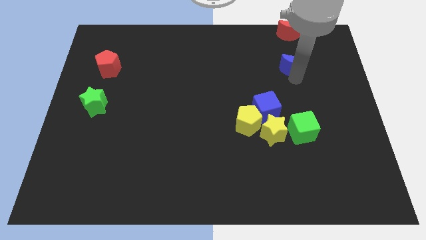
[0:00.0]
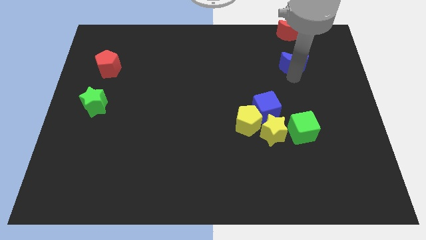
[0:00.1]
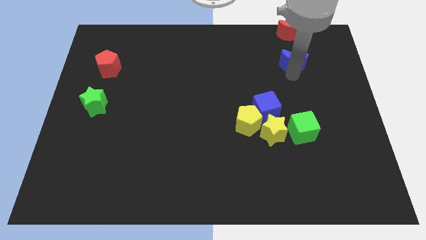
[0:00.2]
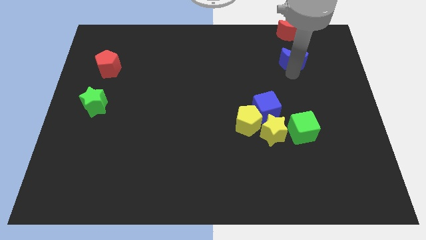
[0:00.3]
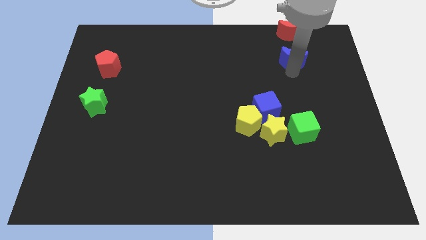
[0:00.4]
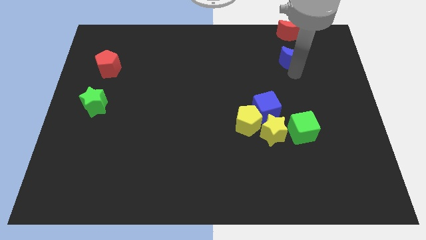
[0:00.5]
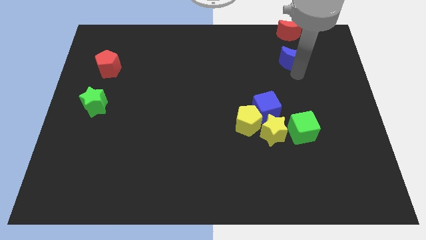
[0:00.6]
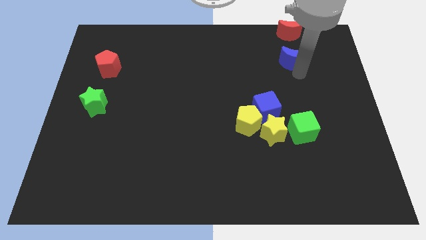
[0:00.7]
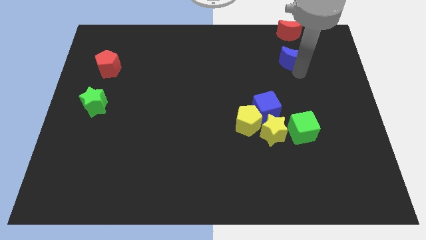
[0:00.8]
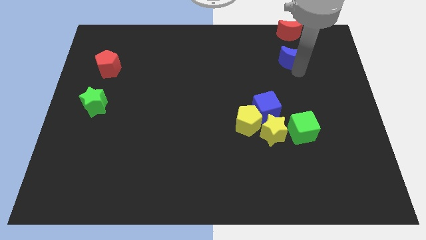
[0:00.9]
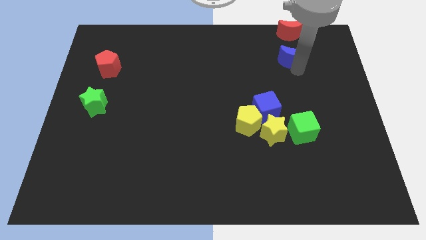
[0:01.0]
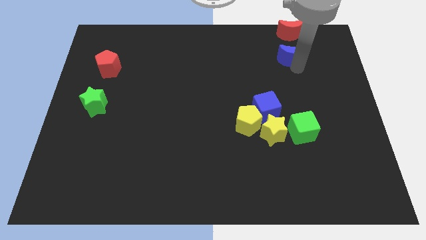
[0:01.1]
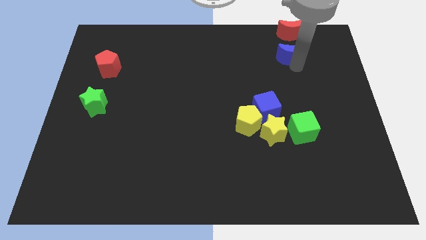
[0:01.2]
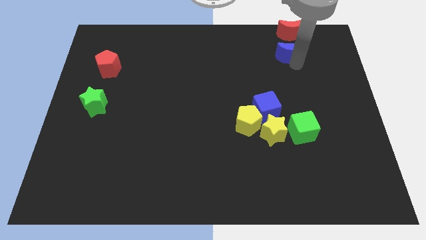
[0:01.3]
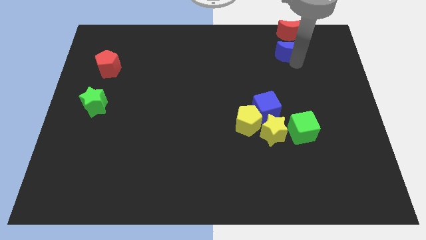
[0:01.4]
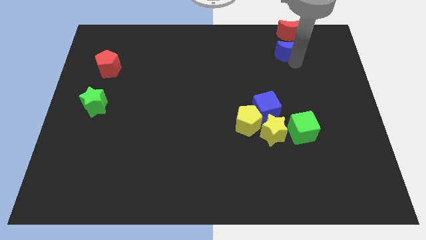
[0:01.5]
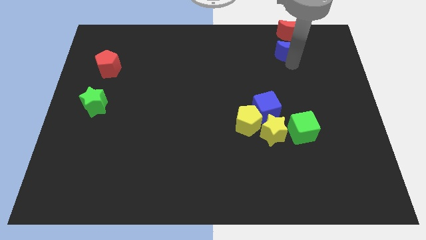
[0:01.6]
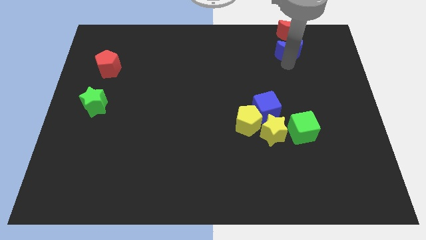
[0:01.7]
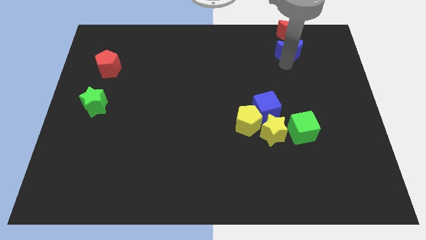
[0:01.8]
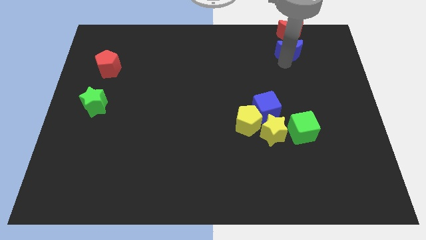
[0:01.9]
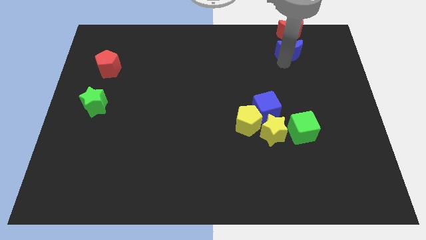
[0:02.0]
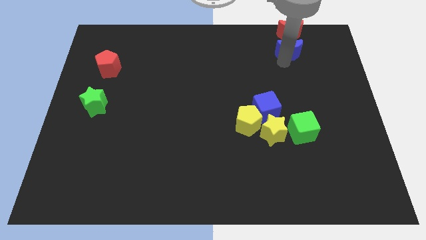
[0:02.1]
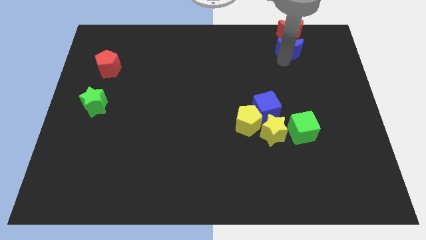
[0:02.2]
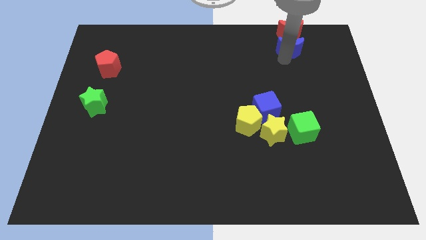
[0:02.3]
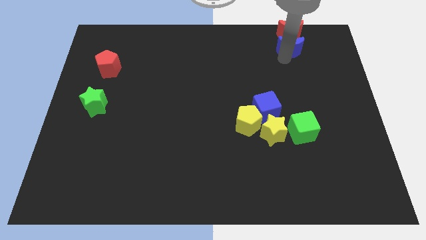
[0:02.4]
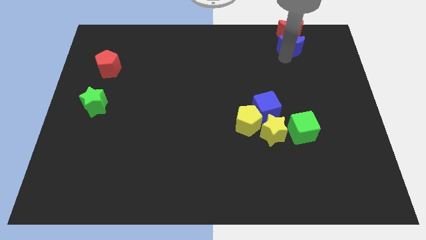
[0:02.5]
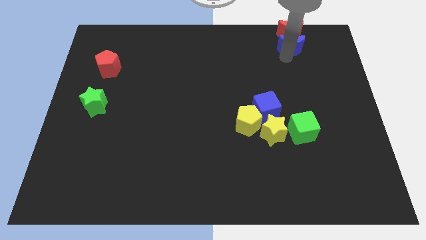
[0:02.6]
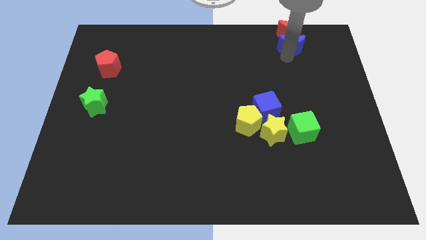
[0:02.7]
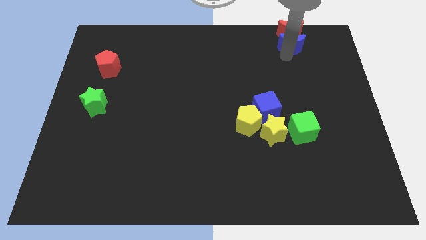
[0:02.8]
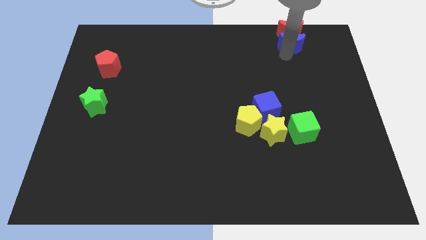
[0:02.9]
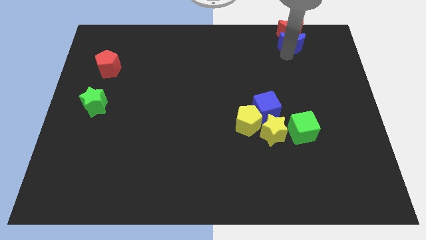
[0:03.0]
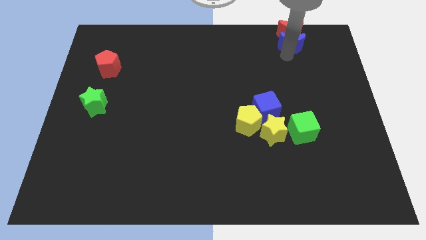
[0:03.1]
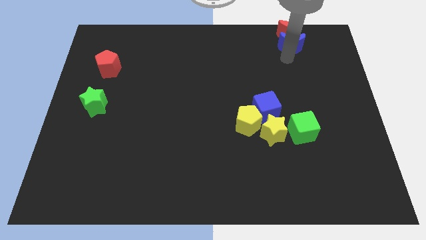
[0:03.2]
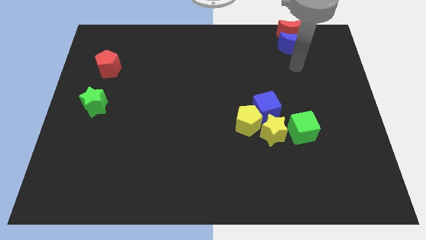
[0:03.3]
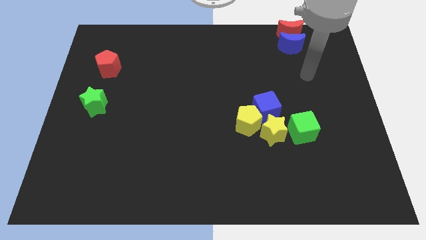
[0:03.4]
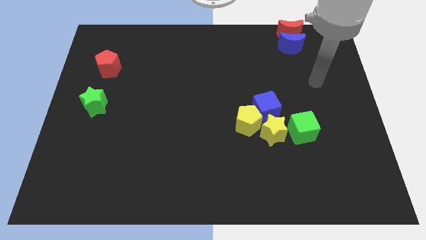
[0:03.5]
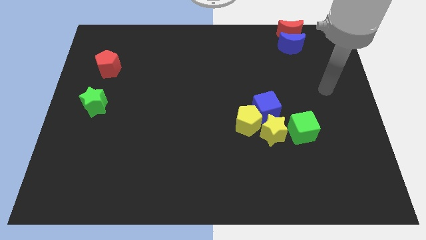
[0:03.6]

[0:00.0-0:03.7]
push the blue crescent towards the red crescent

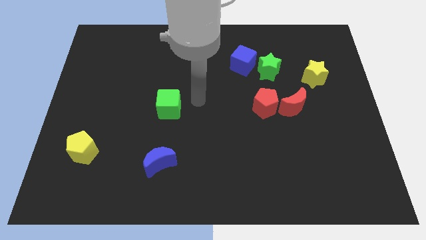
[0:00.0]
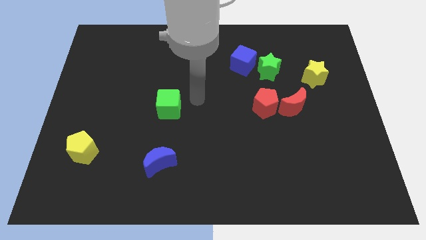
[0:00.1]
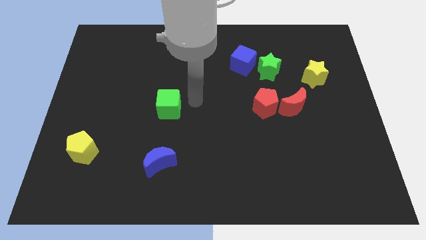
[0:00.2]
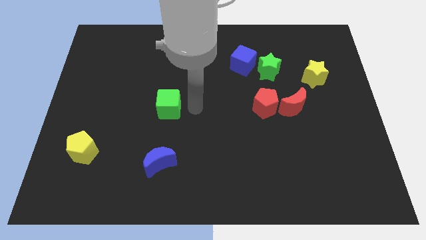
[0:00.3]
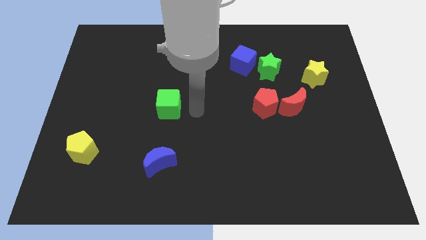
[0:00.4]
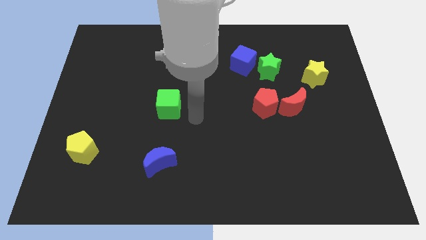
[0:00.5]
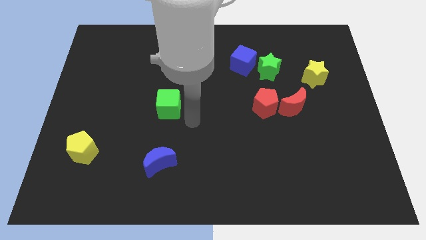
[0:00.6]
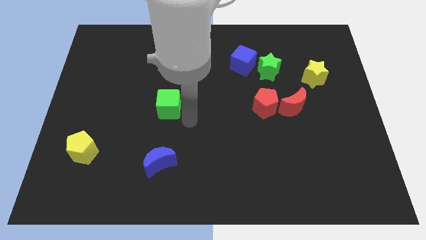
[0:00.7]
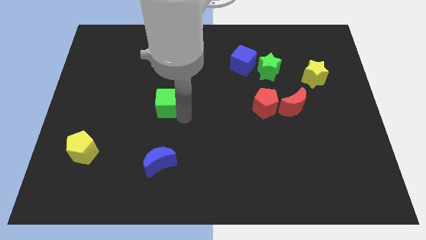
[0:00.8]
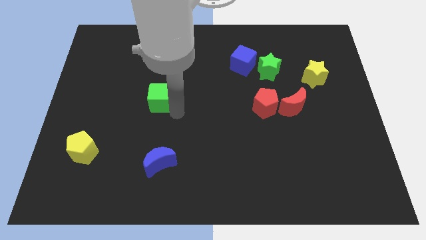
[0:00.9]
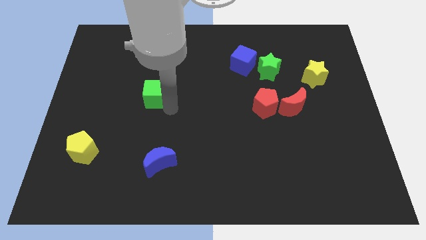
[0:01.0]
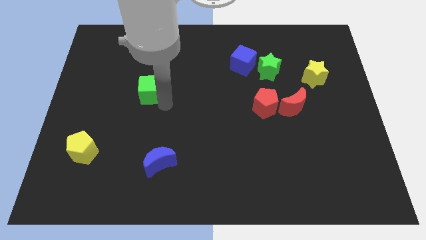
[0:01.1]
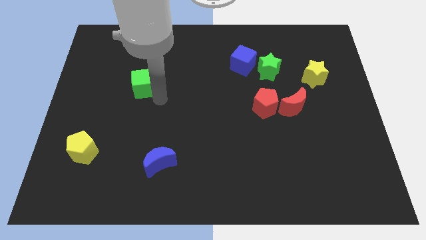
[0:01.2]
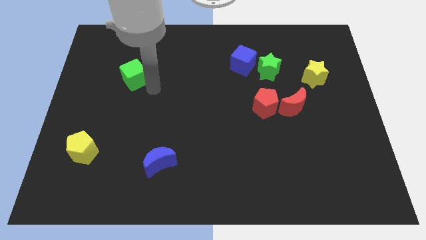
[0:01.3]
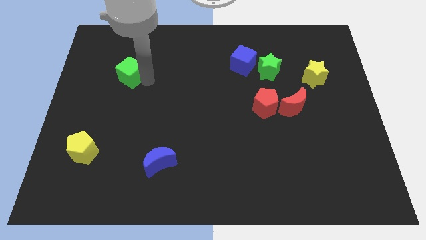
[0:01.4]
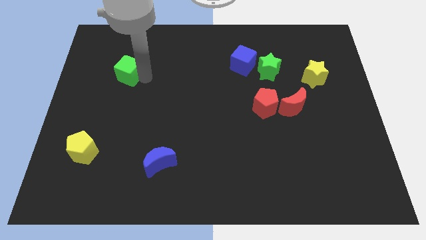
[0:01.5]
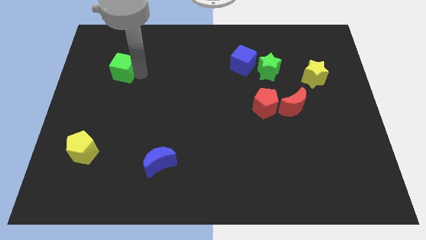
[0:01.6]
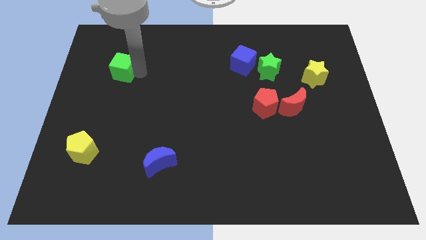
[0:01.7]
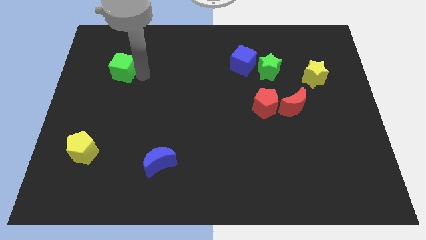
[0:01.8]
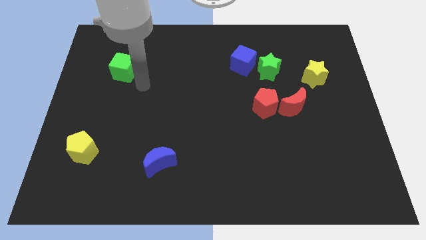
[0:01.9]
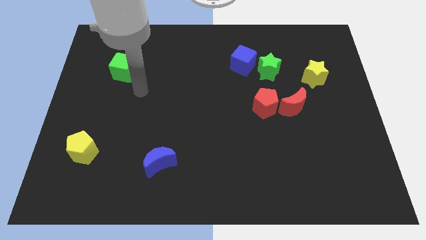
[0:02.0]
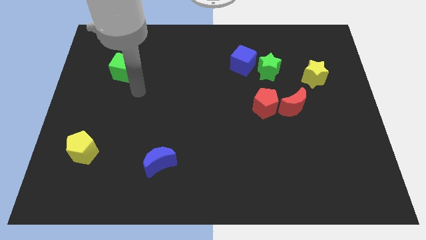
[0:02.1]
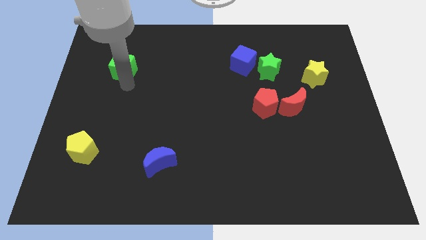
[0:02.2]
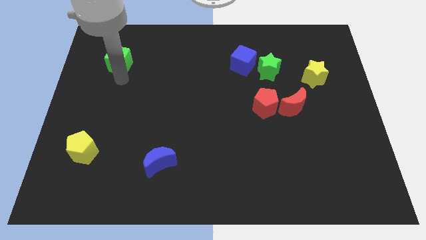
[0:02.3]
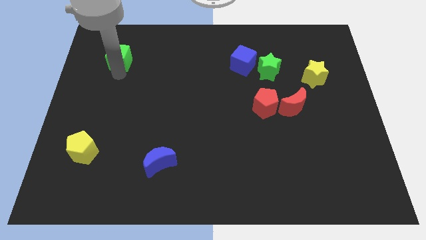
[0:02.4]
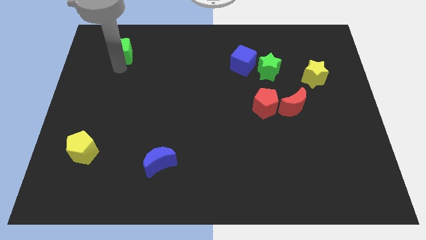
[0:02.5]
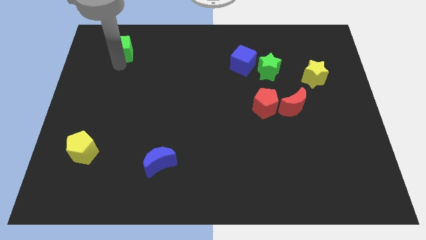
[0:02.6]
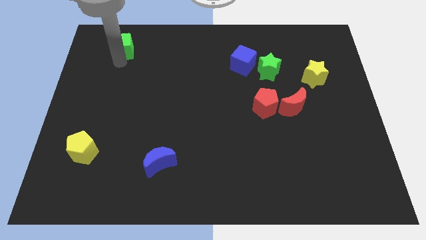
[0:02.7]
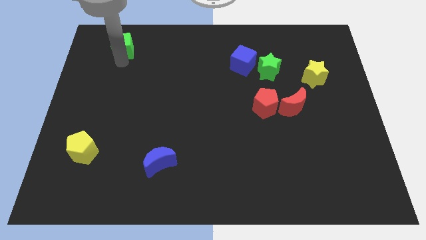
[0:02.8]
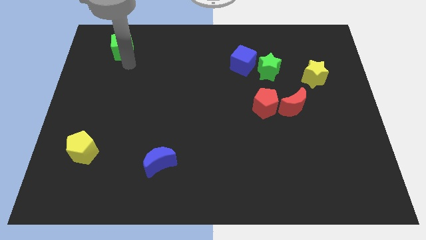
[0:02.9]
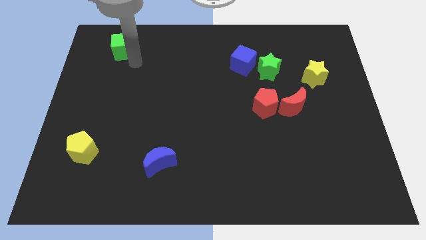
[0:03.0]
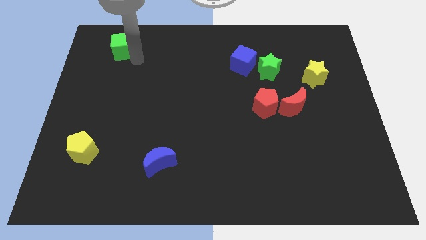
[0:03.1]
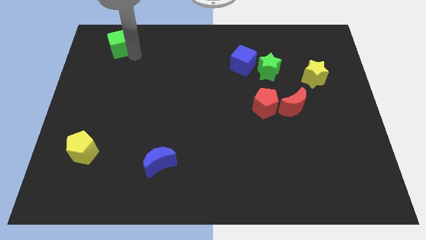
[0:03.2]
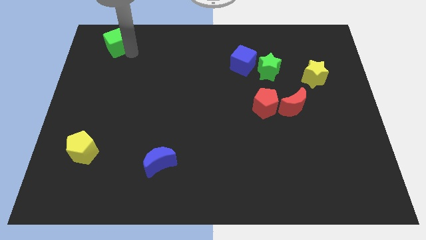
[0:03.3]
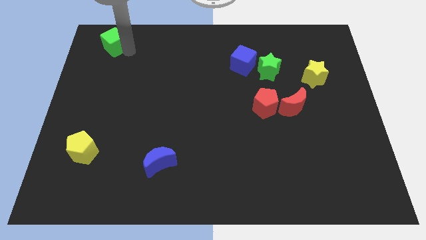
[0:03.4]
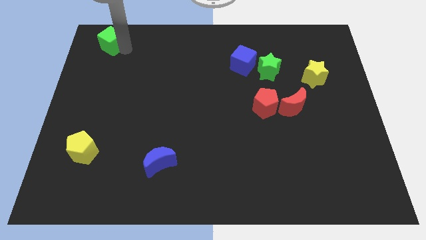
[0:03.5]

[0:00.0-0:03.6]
place the green cube above the yellow pentagon

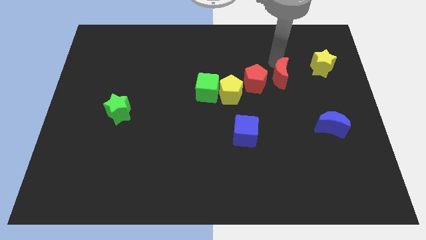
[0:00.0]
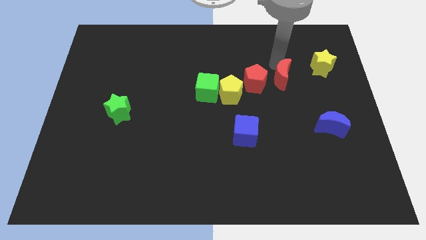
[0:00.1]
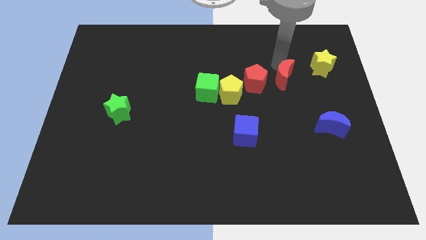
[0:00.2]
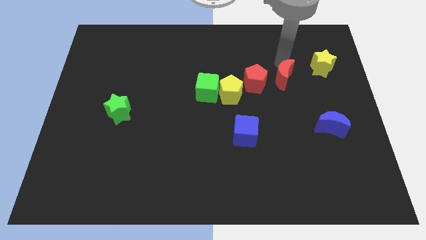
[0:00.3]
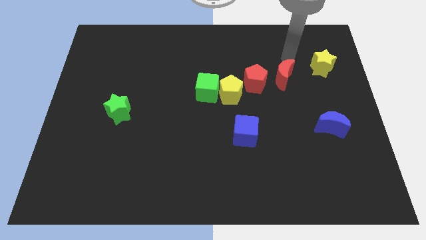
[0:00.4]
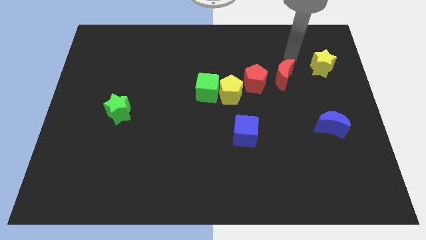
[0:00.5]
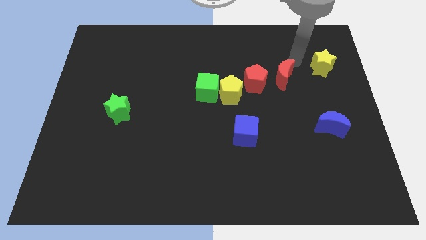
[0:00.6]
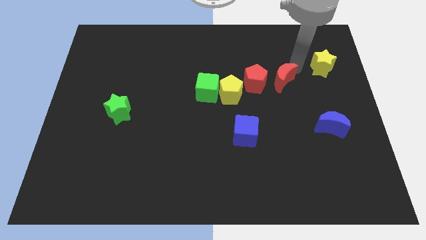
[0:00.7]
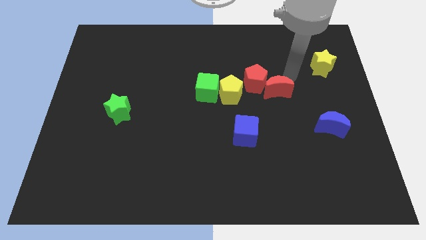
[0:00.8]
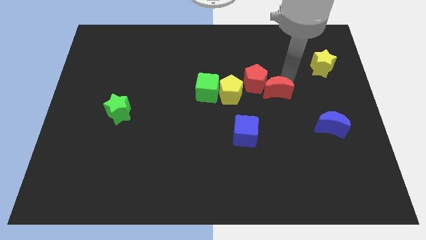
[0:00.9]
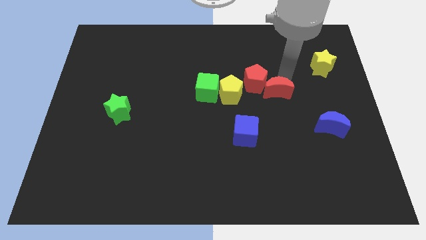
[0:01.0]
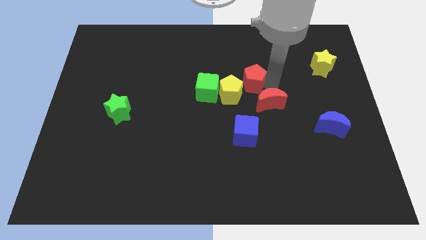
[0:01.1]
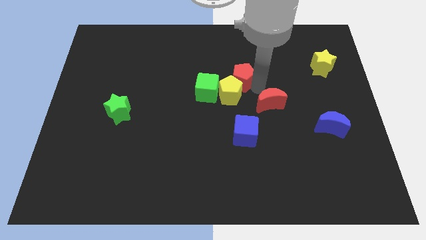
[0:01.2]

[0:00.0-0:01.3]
move the red moon to the bottom side of the red pentagon

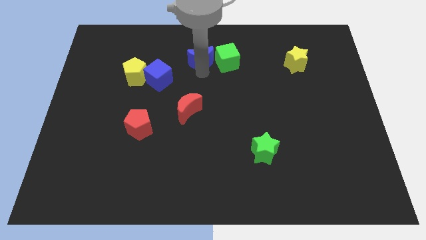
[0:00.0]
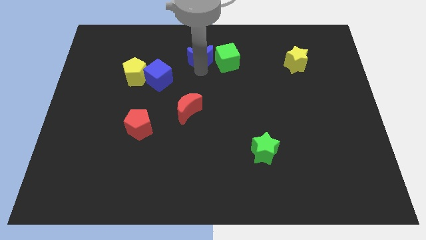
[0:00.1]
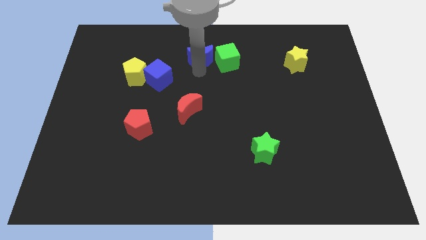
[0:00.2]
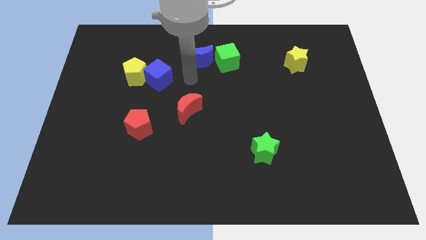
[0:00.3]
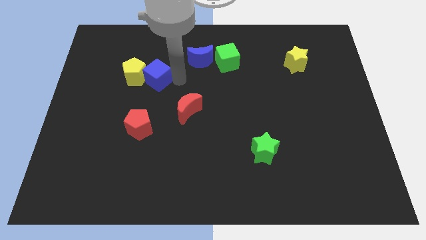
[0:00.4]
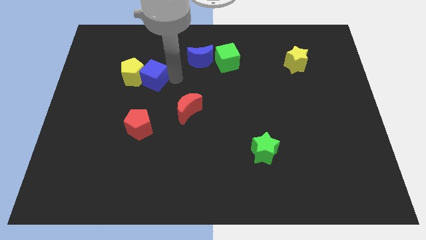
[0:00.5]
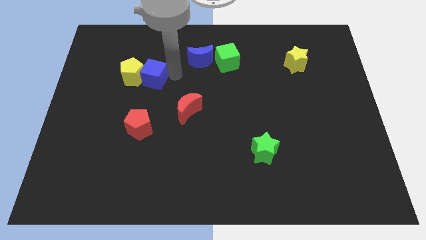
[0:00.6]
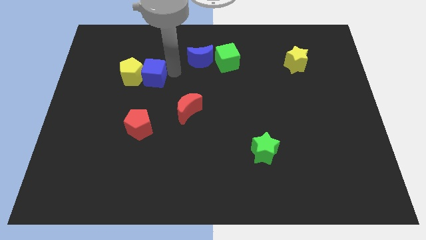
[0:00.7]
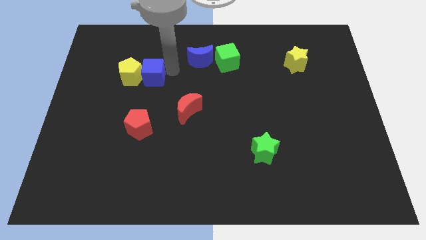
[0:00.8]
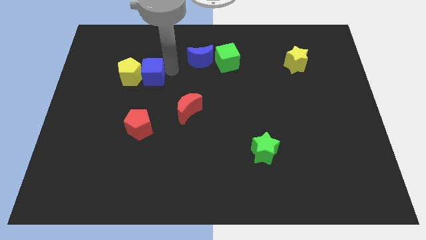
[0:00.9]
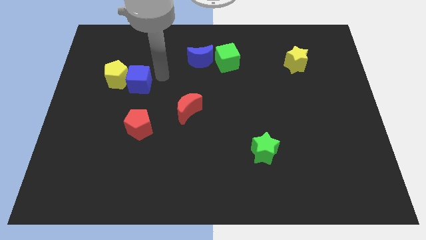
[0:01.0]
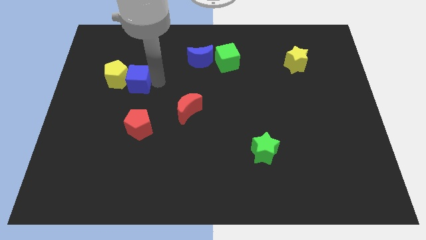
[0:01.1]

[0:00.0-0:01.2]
push the blue cube and yellow pentagon towards the left side of the board
